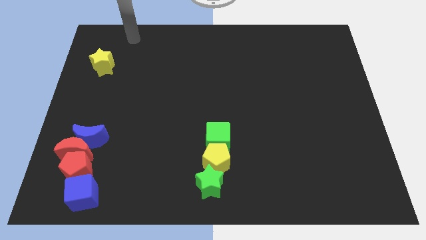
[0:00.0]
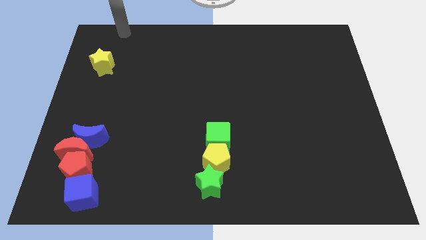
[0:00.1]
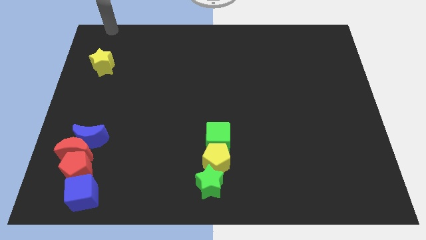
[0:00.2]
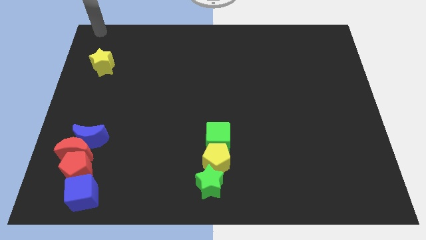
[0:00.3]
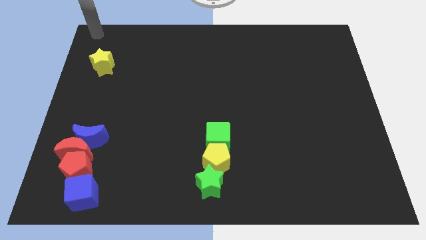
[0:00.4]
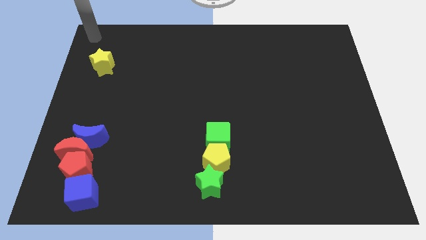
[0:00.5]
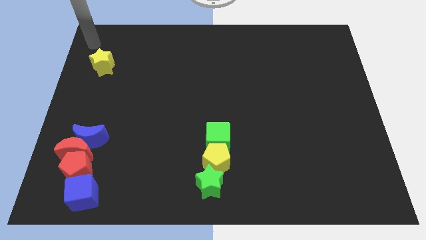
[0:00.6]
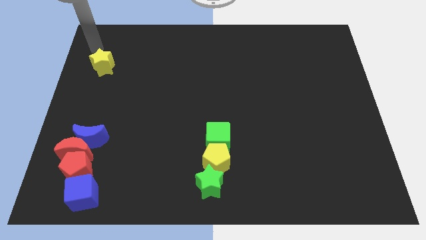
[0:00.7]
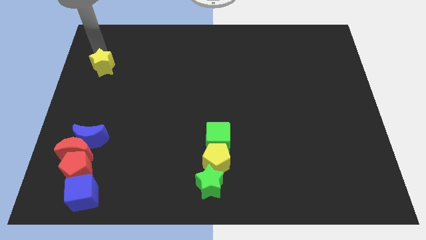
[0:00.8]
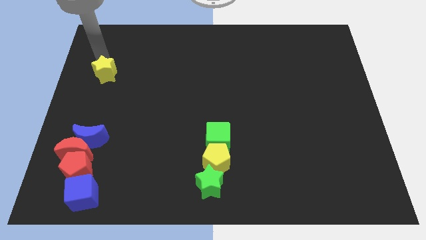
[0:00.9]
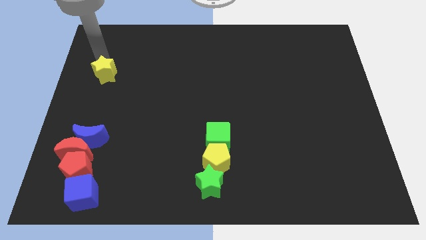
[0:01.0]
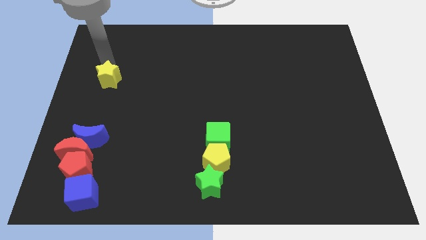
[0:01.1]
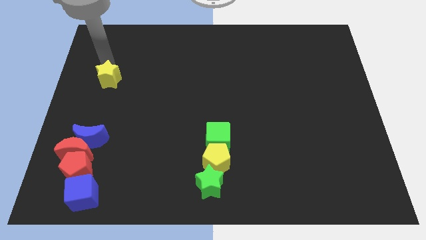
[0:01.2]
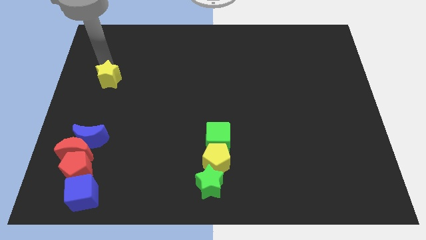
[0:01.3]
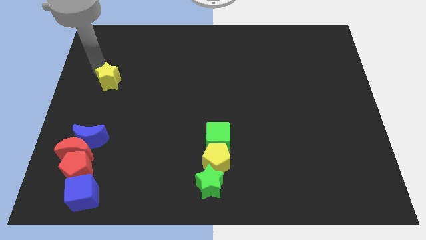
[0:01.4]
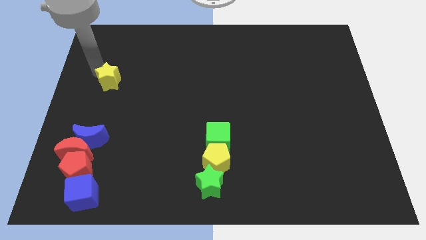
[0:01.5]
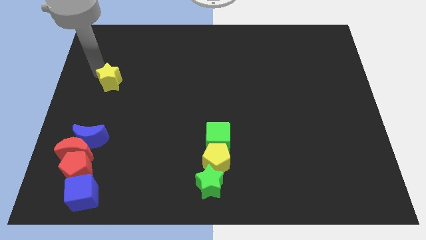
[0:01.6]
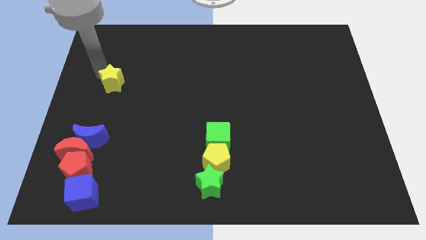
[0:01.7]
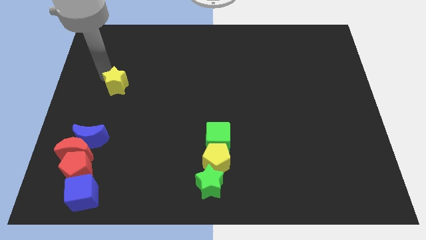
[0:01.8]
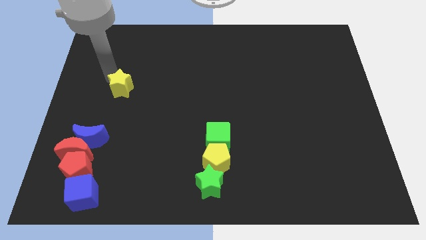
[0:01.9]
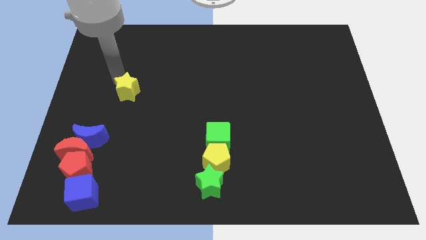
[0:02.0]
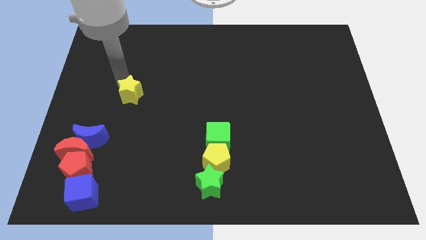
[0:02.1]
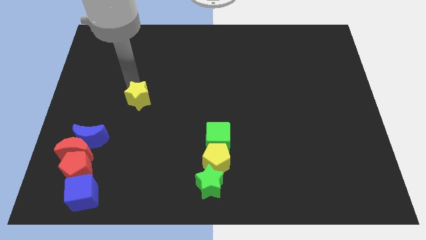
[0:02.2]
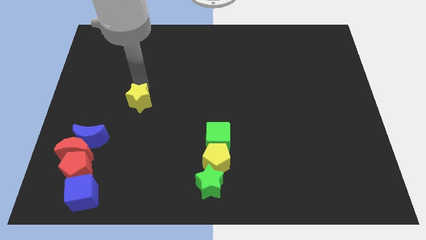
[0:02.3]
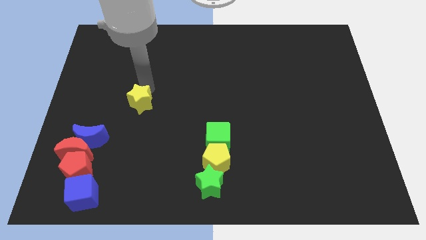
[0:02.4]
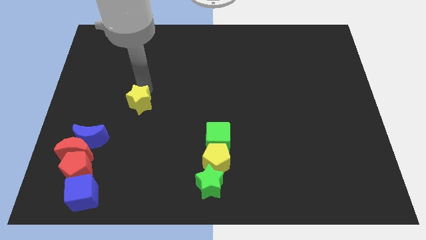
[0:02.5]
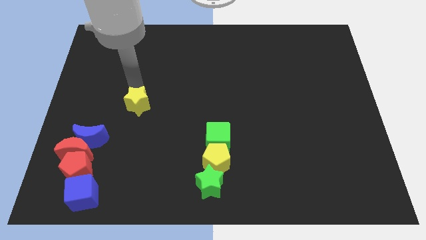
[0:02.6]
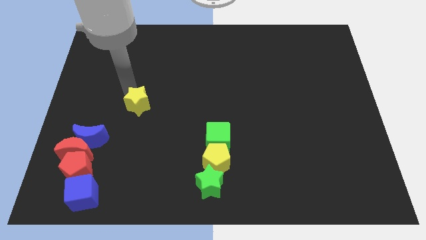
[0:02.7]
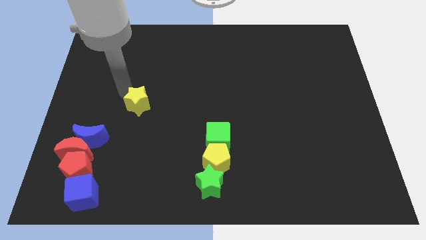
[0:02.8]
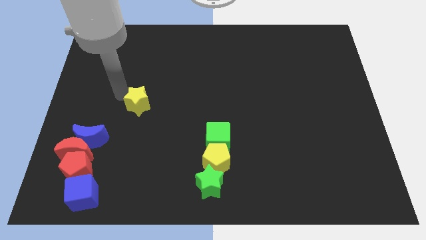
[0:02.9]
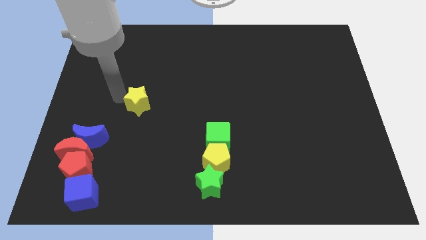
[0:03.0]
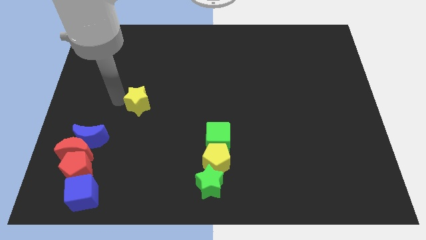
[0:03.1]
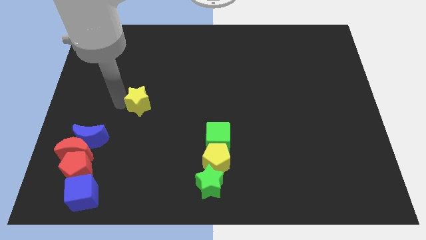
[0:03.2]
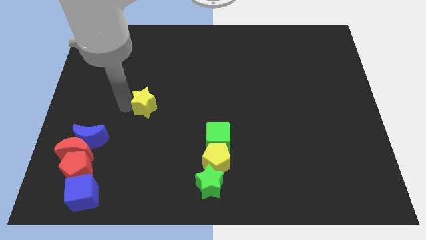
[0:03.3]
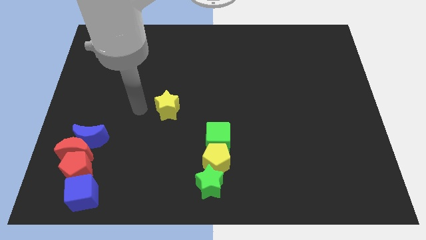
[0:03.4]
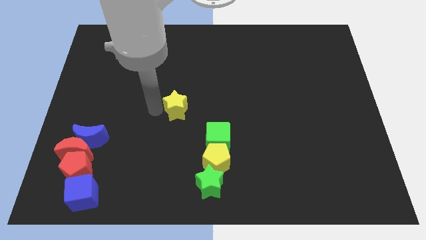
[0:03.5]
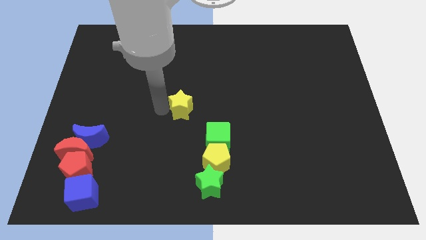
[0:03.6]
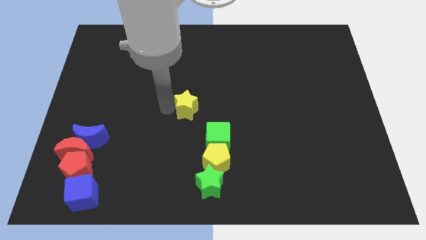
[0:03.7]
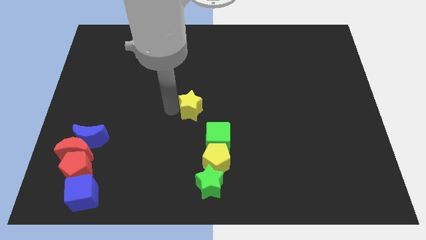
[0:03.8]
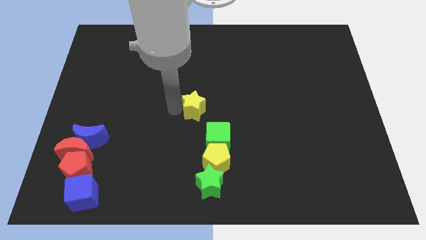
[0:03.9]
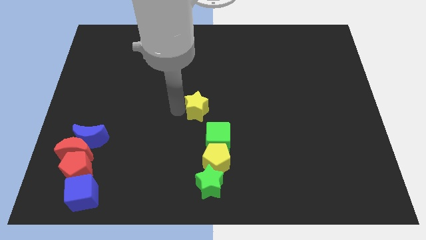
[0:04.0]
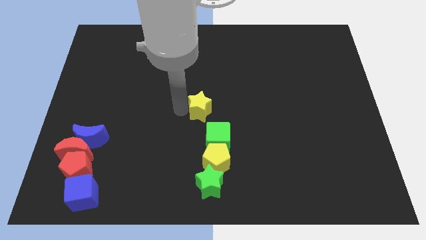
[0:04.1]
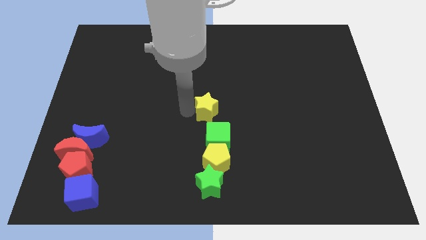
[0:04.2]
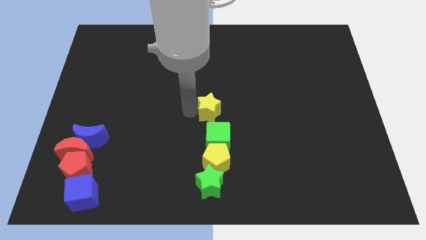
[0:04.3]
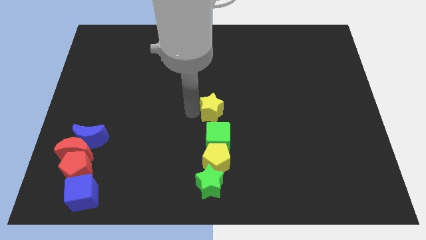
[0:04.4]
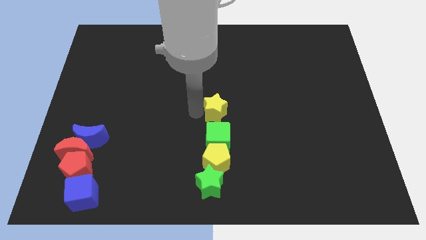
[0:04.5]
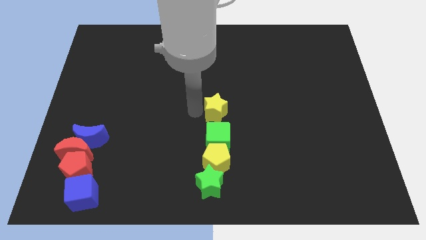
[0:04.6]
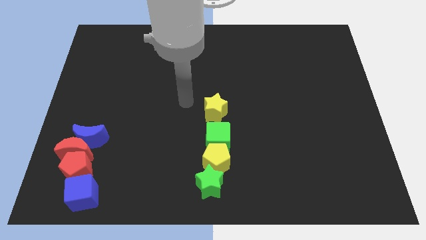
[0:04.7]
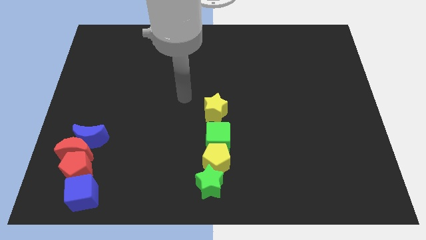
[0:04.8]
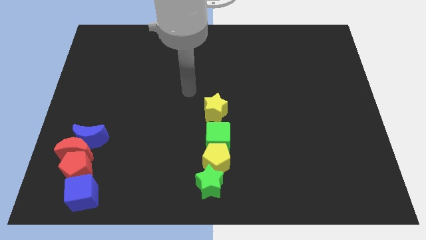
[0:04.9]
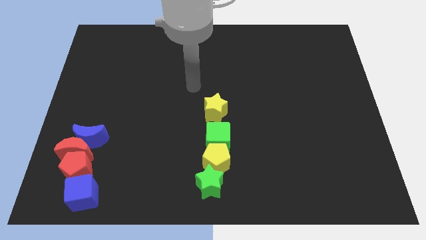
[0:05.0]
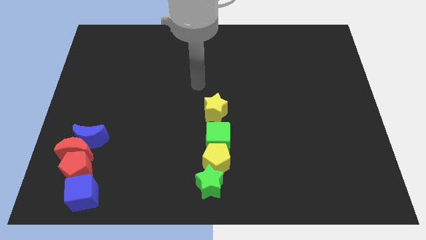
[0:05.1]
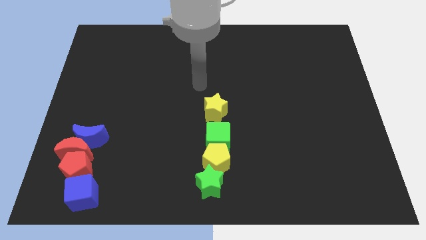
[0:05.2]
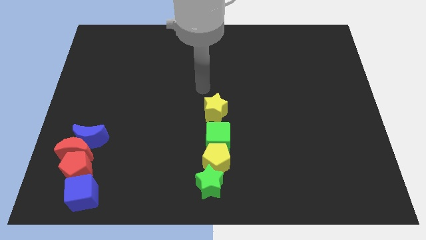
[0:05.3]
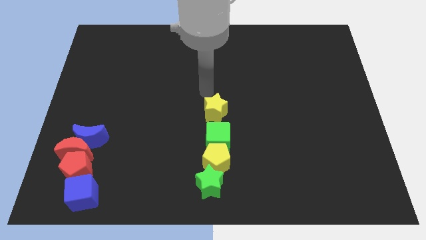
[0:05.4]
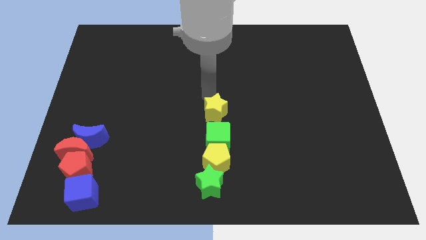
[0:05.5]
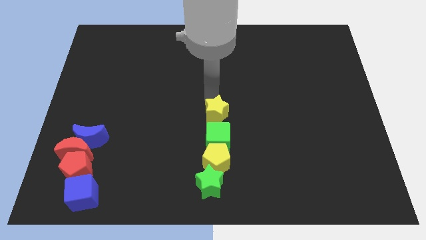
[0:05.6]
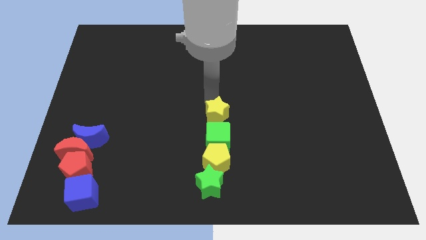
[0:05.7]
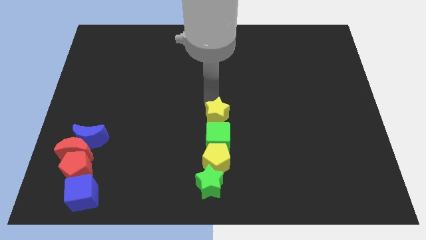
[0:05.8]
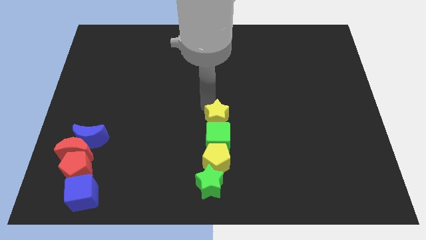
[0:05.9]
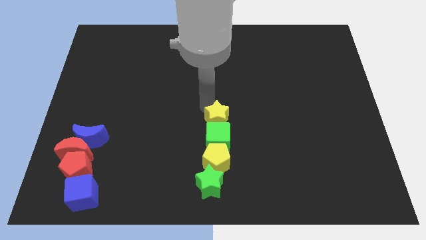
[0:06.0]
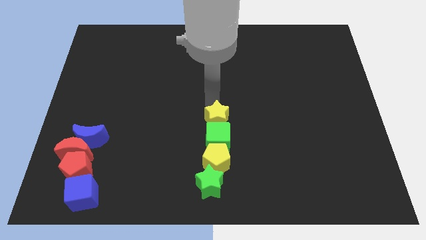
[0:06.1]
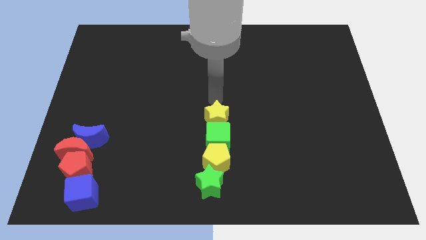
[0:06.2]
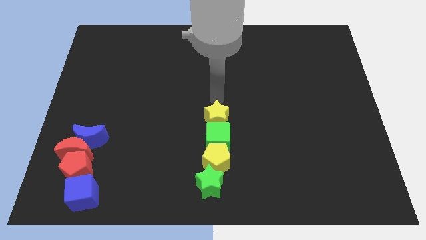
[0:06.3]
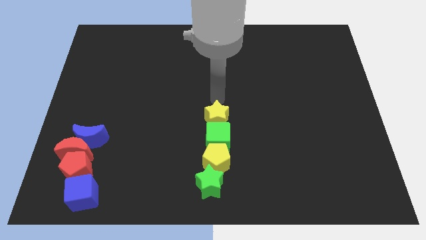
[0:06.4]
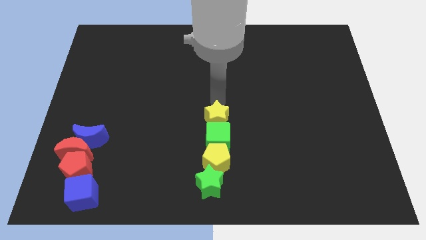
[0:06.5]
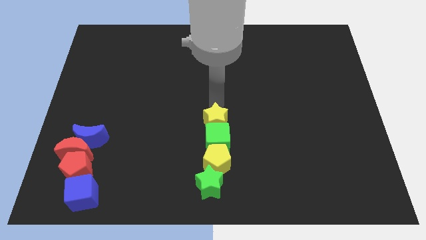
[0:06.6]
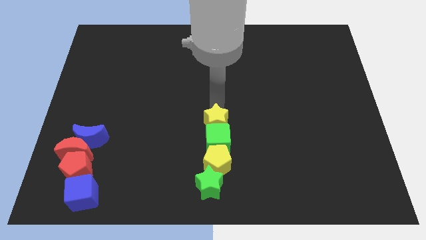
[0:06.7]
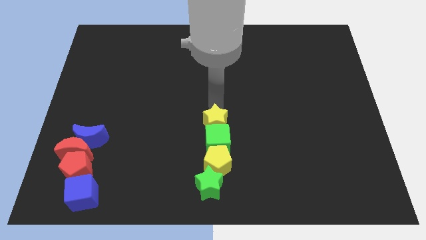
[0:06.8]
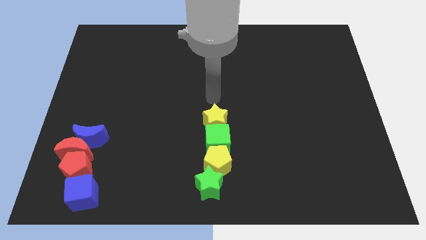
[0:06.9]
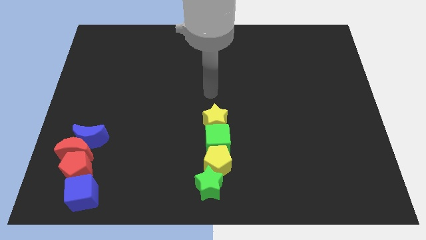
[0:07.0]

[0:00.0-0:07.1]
place the yellow star to the center of the board

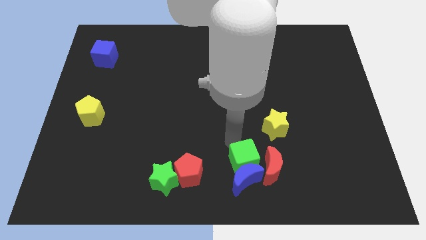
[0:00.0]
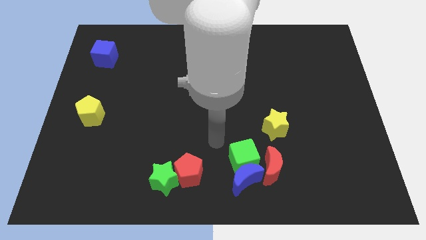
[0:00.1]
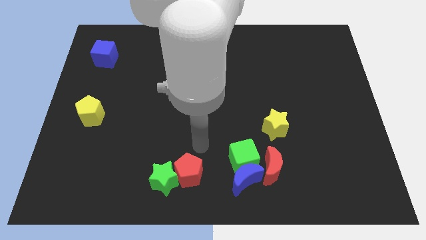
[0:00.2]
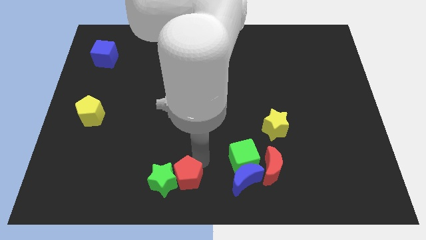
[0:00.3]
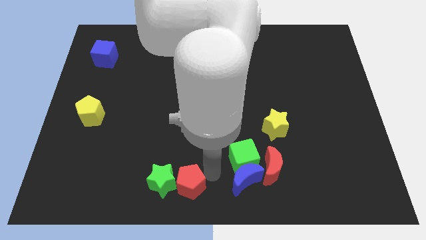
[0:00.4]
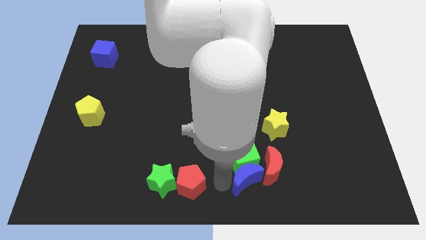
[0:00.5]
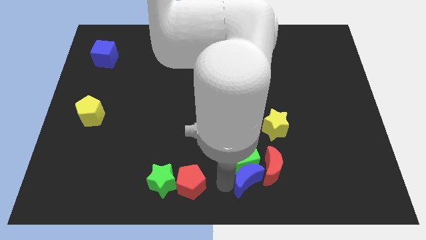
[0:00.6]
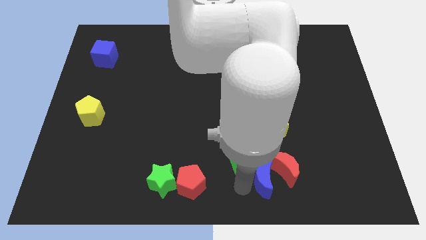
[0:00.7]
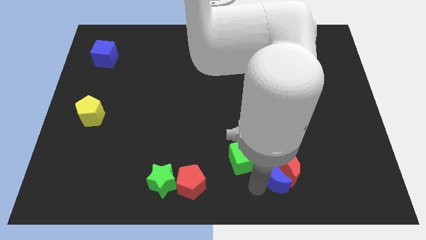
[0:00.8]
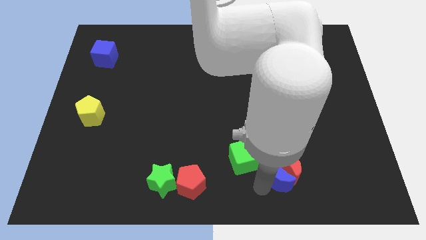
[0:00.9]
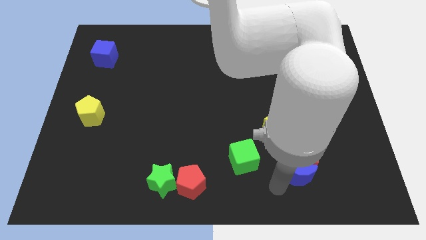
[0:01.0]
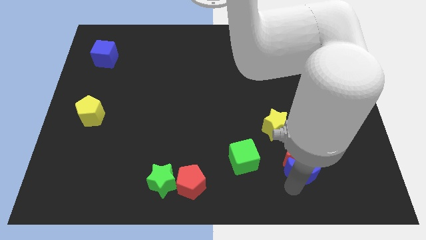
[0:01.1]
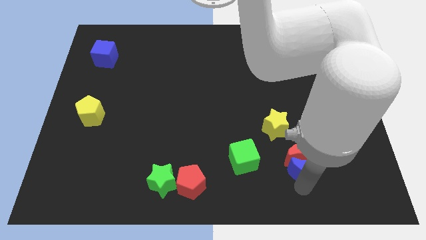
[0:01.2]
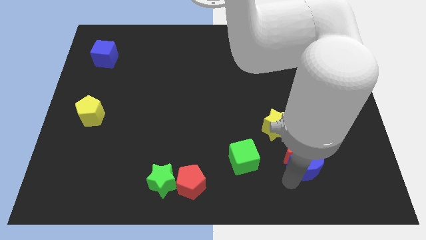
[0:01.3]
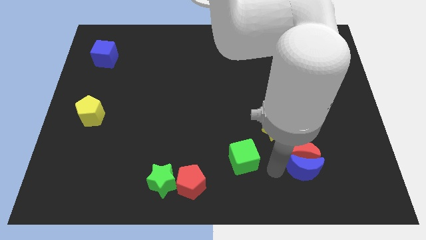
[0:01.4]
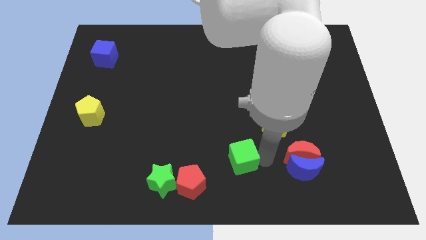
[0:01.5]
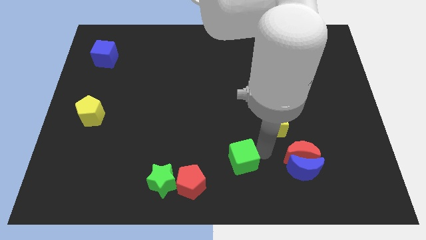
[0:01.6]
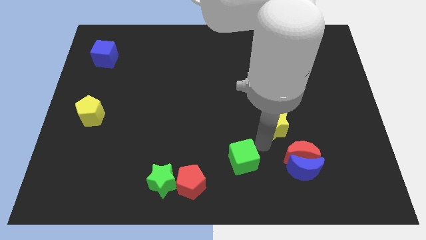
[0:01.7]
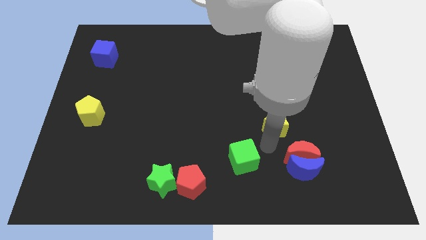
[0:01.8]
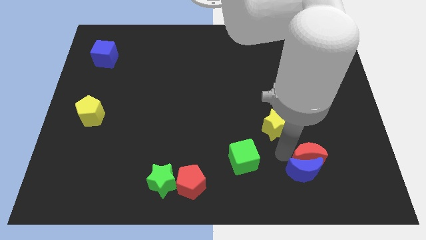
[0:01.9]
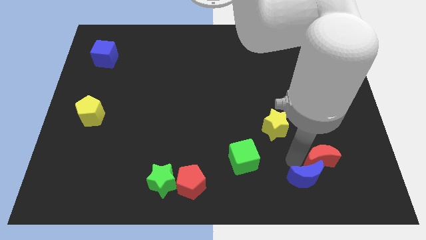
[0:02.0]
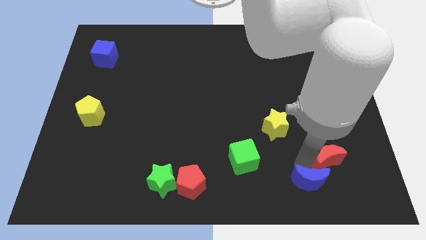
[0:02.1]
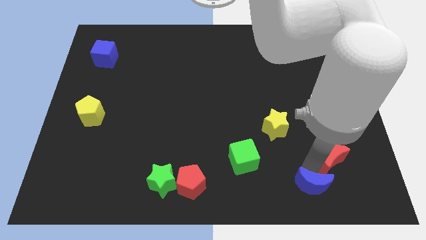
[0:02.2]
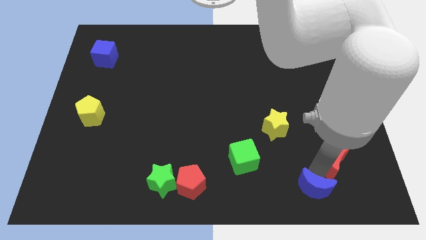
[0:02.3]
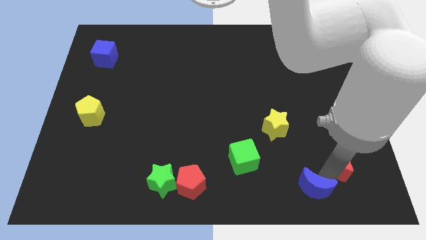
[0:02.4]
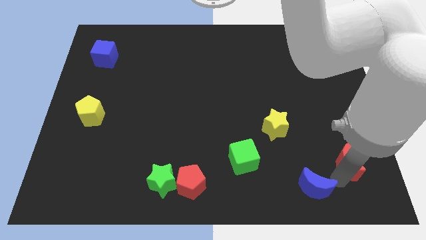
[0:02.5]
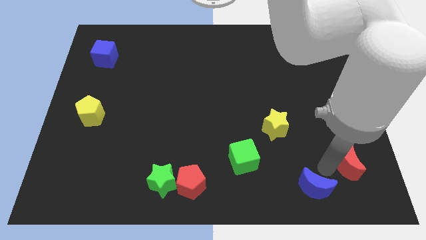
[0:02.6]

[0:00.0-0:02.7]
seperate red moon and blue moon
